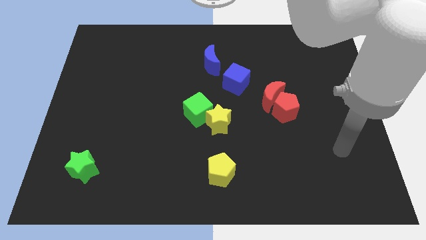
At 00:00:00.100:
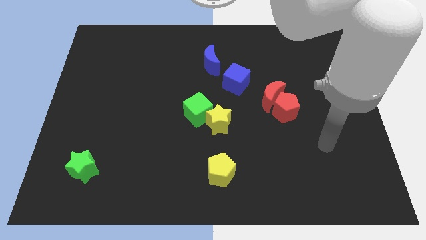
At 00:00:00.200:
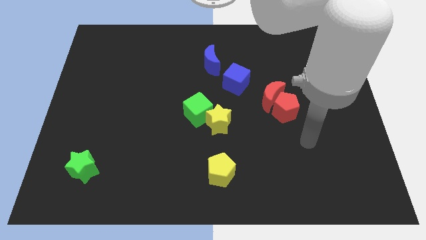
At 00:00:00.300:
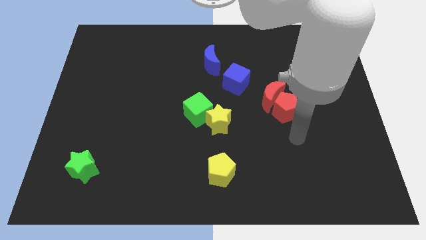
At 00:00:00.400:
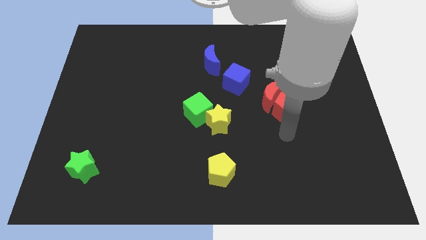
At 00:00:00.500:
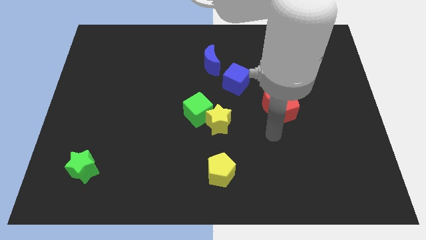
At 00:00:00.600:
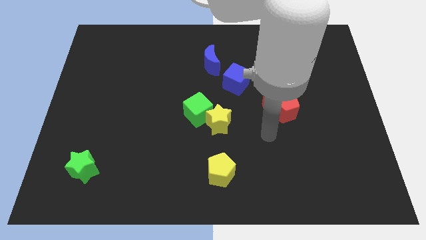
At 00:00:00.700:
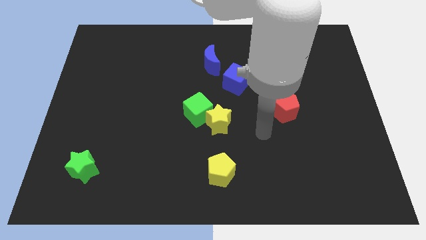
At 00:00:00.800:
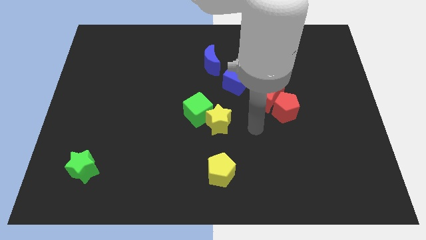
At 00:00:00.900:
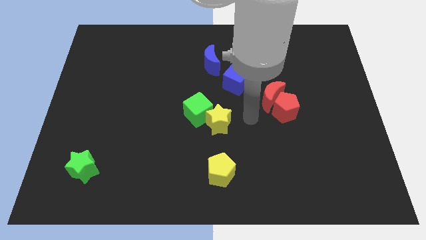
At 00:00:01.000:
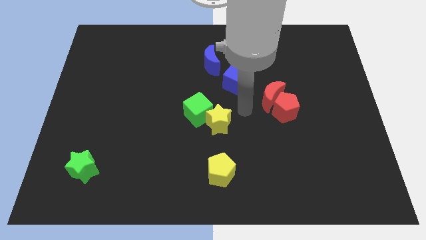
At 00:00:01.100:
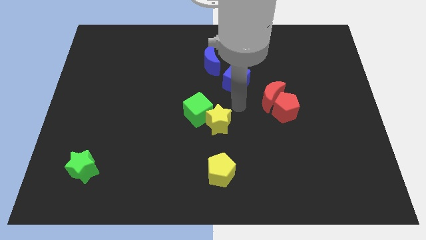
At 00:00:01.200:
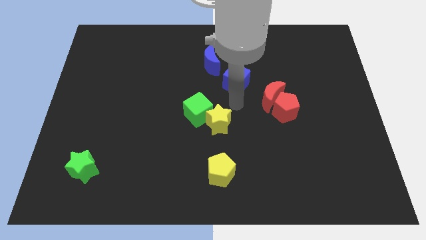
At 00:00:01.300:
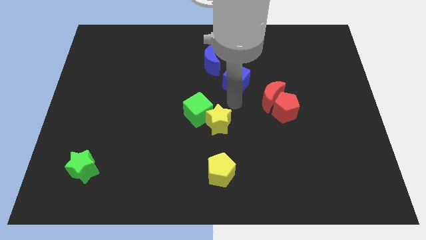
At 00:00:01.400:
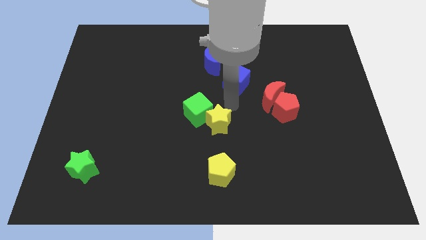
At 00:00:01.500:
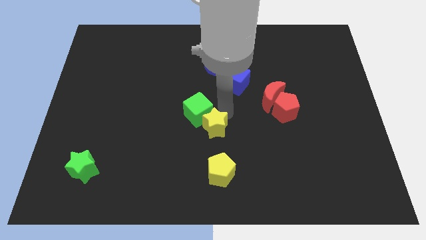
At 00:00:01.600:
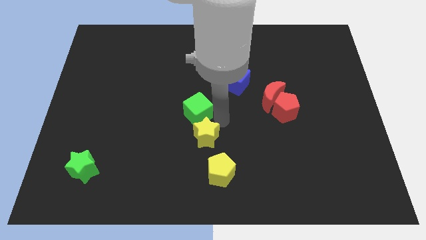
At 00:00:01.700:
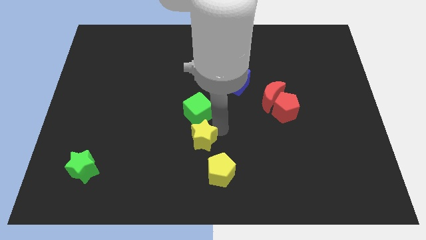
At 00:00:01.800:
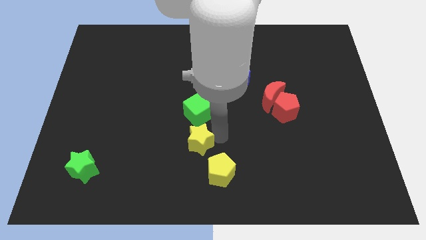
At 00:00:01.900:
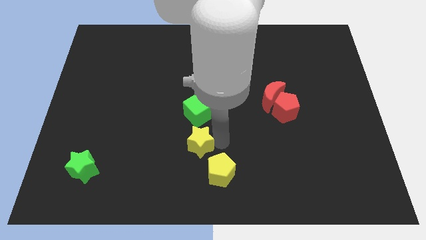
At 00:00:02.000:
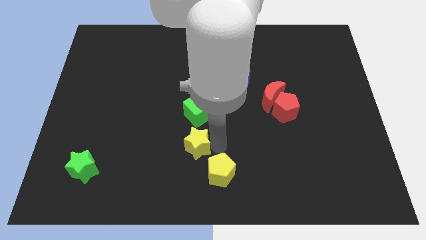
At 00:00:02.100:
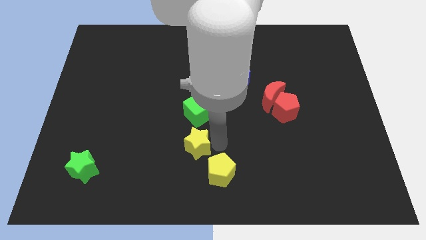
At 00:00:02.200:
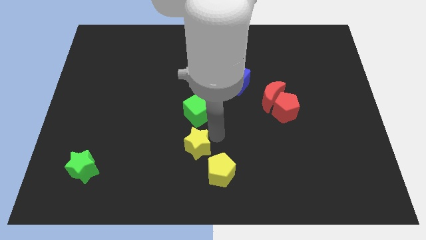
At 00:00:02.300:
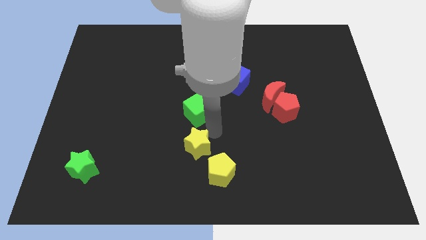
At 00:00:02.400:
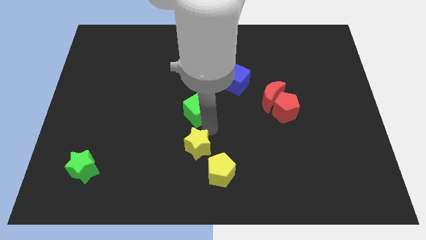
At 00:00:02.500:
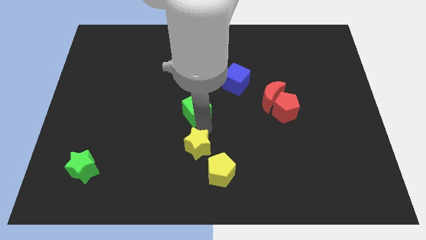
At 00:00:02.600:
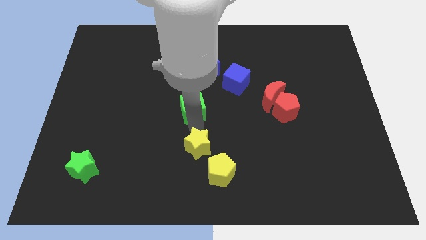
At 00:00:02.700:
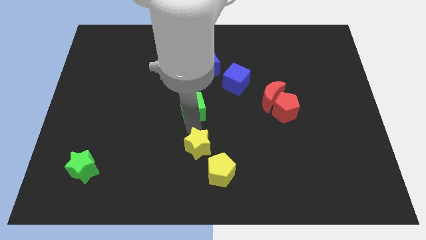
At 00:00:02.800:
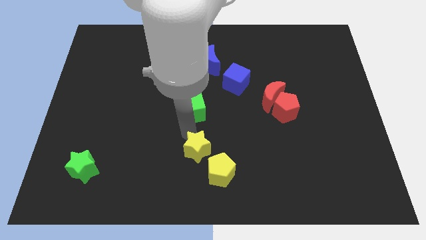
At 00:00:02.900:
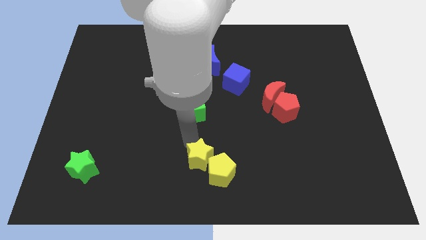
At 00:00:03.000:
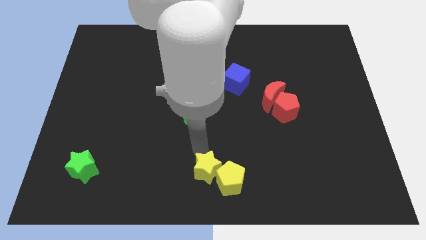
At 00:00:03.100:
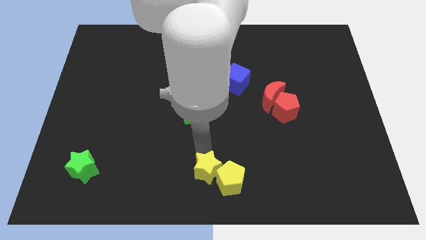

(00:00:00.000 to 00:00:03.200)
push the yellow star into the yellow pentagon

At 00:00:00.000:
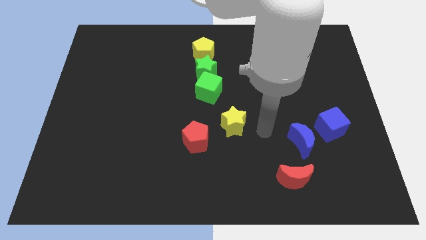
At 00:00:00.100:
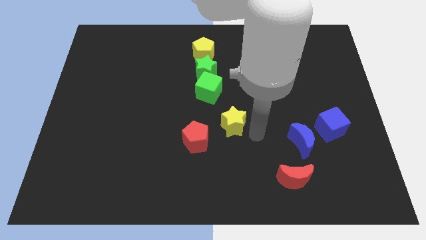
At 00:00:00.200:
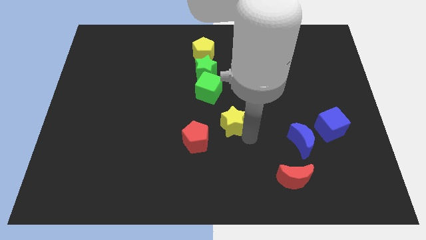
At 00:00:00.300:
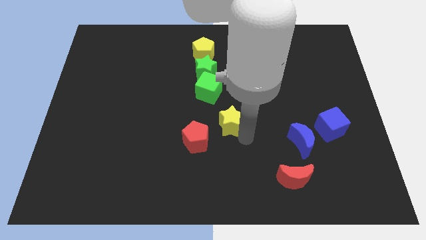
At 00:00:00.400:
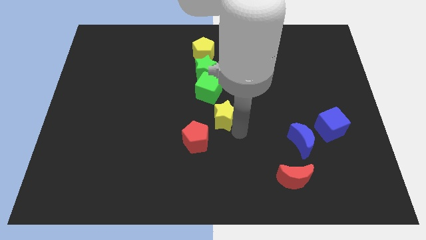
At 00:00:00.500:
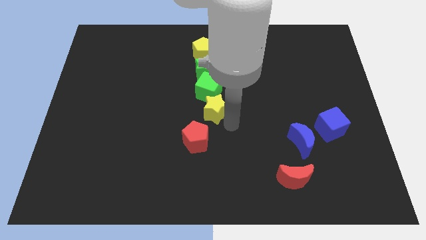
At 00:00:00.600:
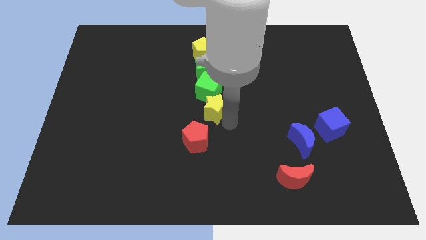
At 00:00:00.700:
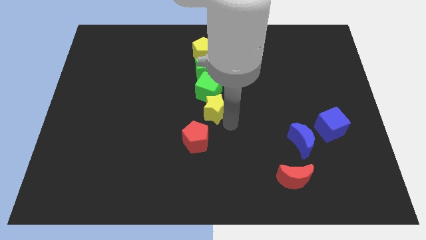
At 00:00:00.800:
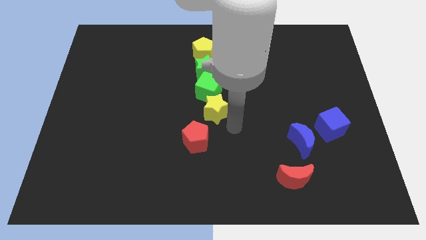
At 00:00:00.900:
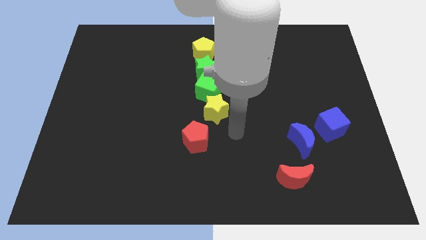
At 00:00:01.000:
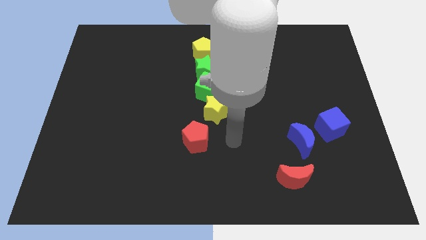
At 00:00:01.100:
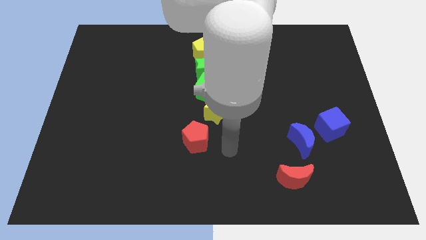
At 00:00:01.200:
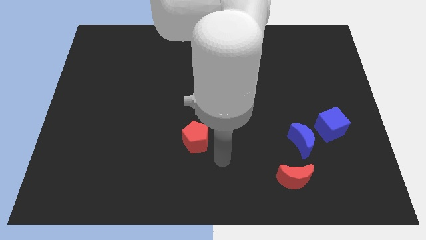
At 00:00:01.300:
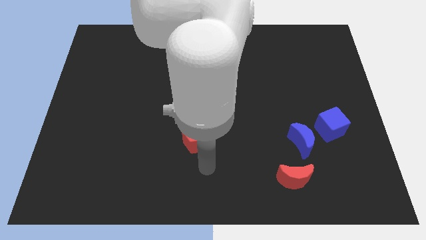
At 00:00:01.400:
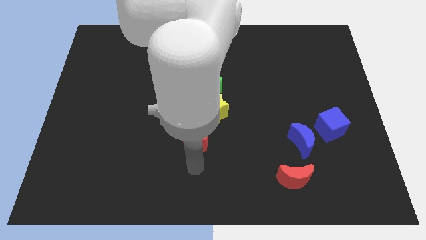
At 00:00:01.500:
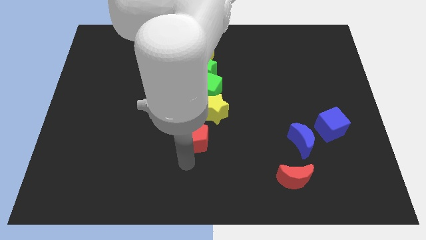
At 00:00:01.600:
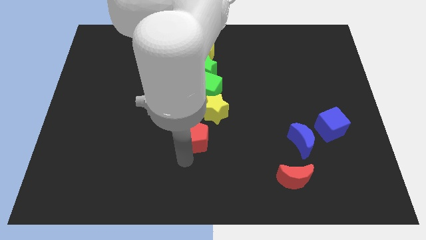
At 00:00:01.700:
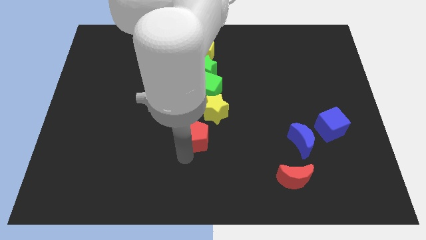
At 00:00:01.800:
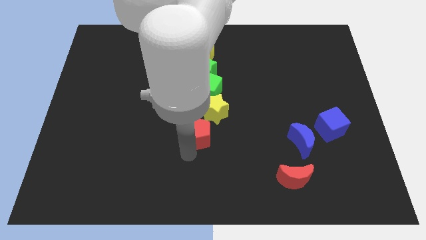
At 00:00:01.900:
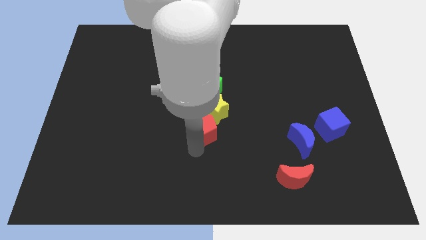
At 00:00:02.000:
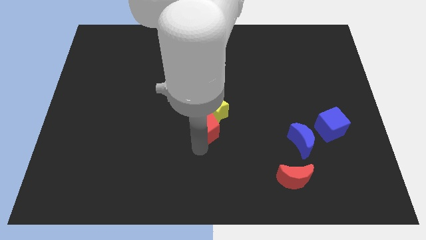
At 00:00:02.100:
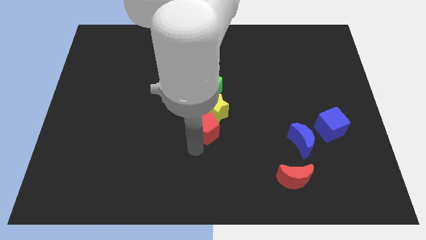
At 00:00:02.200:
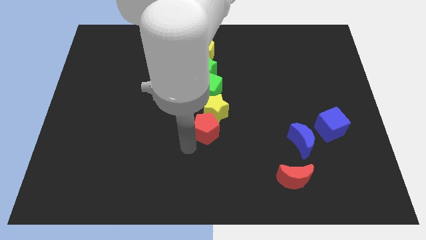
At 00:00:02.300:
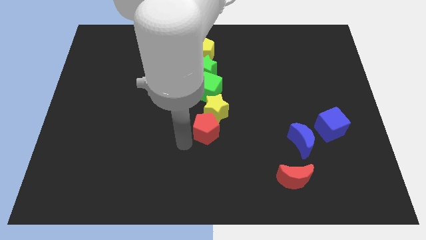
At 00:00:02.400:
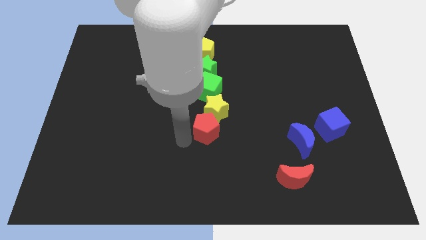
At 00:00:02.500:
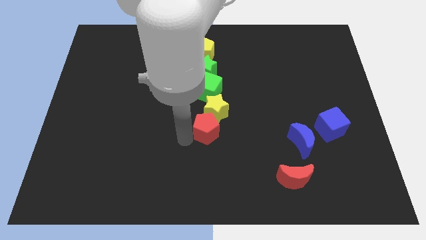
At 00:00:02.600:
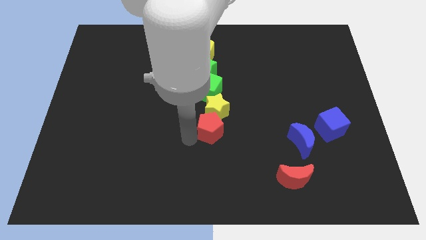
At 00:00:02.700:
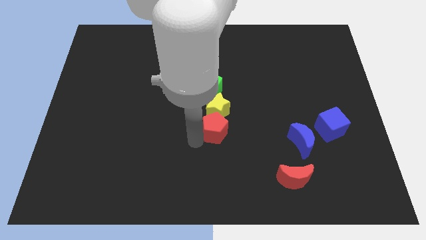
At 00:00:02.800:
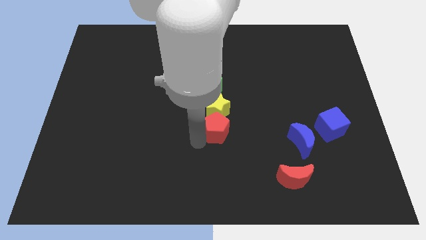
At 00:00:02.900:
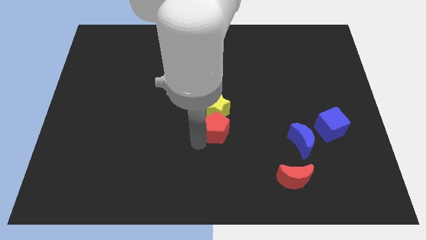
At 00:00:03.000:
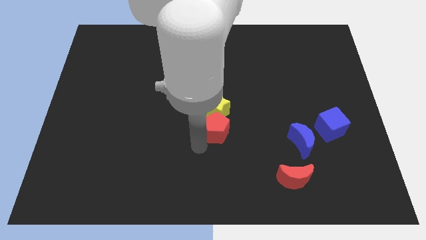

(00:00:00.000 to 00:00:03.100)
place the yellow star and red pentagon to make vertical line

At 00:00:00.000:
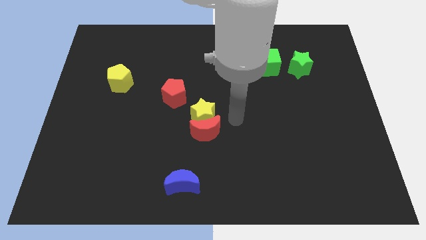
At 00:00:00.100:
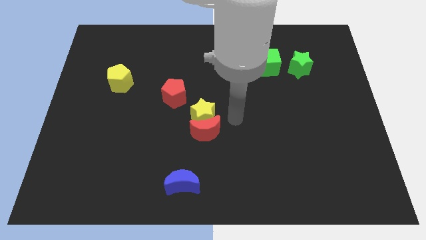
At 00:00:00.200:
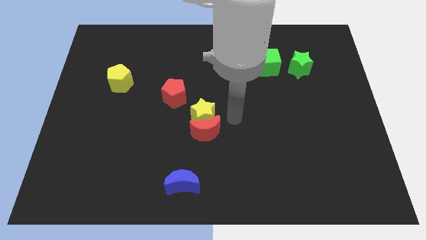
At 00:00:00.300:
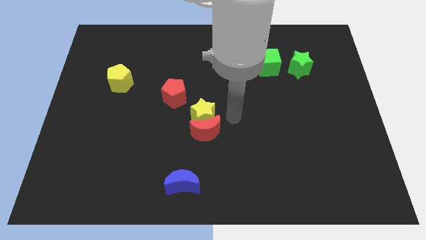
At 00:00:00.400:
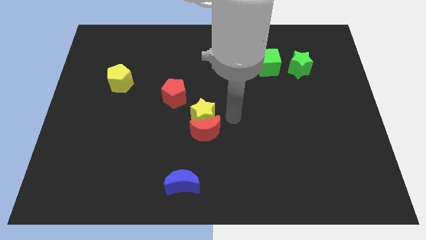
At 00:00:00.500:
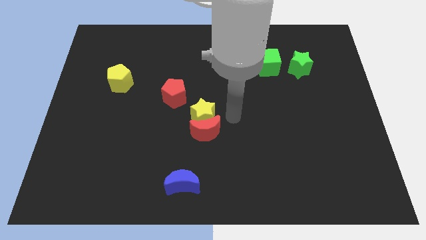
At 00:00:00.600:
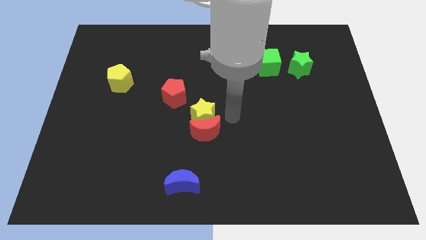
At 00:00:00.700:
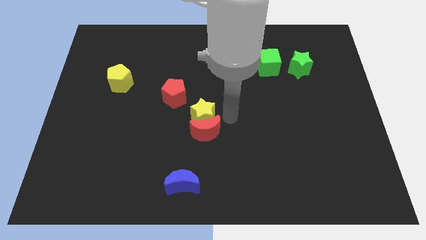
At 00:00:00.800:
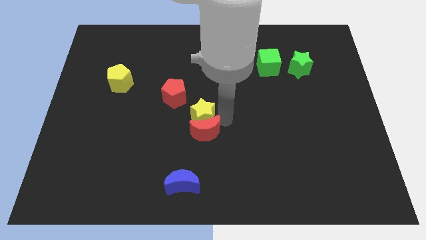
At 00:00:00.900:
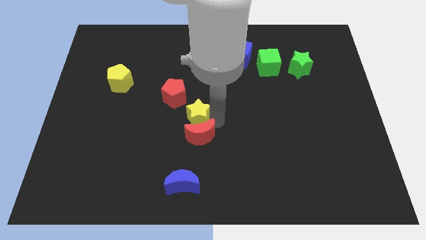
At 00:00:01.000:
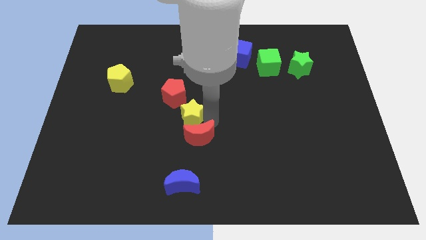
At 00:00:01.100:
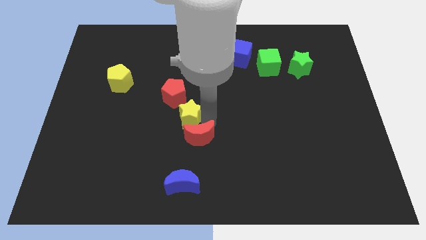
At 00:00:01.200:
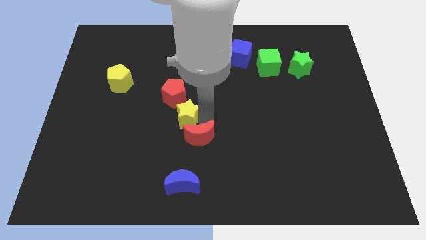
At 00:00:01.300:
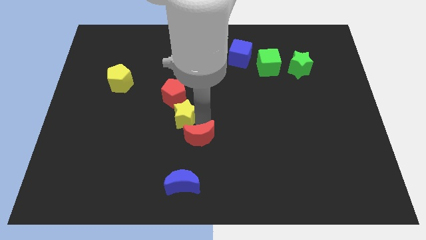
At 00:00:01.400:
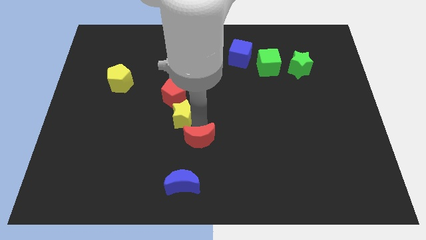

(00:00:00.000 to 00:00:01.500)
separate the yellow star from the red moon

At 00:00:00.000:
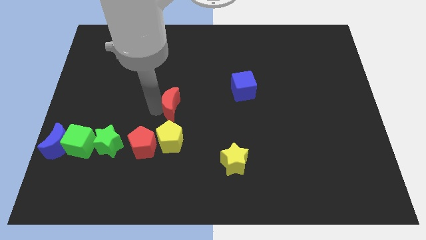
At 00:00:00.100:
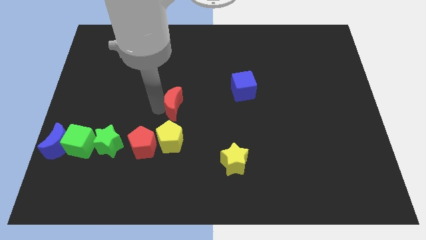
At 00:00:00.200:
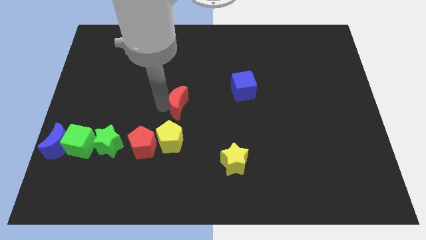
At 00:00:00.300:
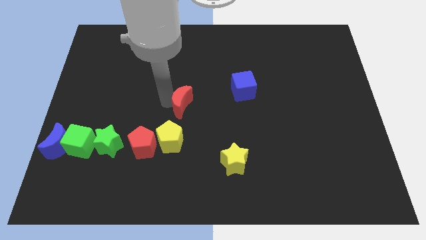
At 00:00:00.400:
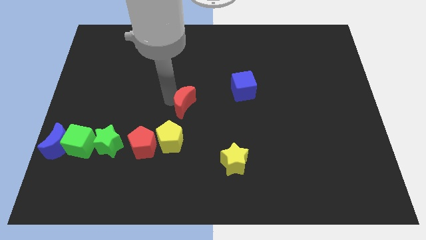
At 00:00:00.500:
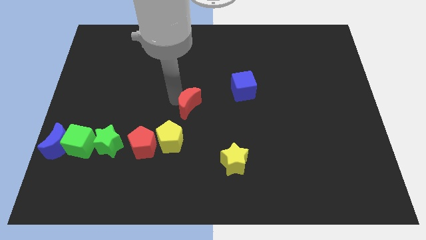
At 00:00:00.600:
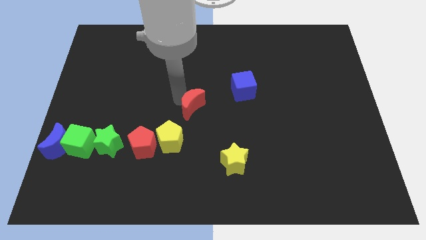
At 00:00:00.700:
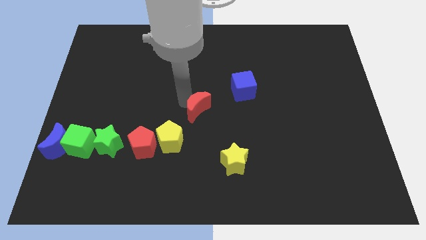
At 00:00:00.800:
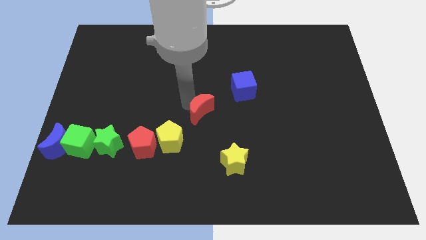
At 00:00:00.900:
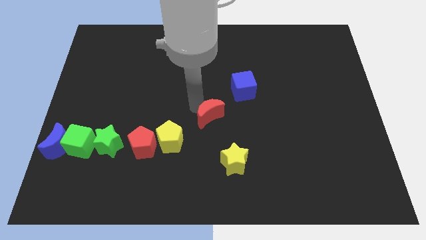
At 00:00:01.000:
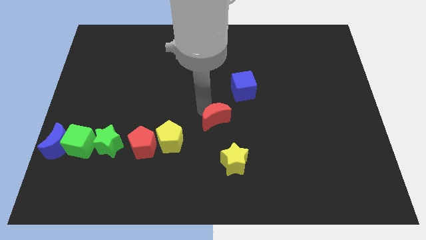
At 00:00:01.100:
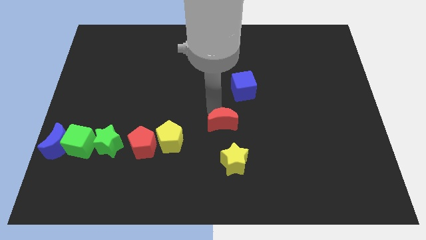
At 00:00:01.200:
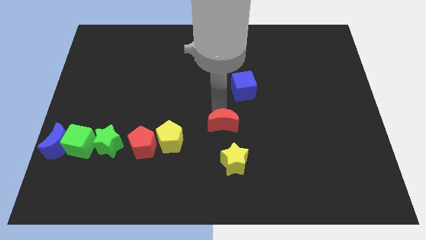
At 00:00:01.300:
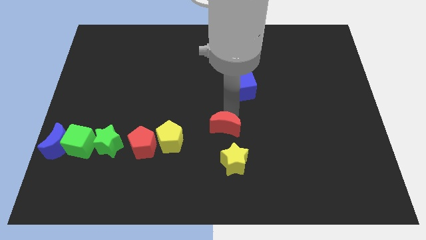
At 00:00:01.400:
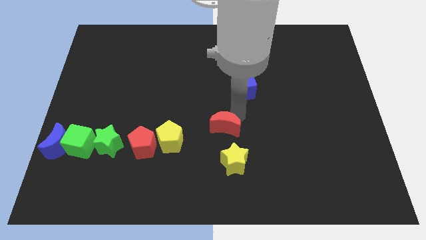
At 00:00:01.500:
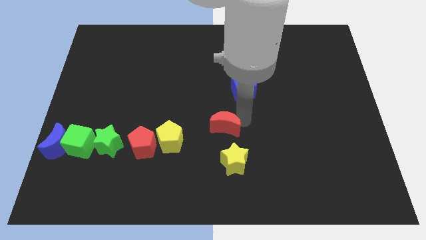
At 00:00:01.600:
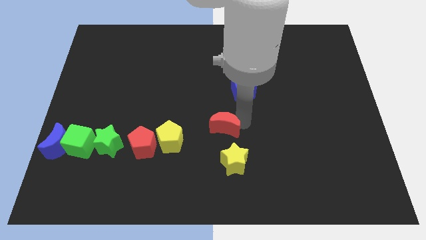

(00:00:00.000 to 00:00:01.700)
move red crescent towards the yellow star
